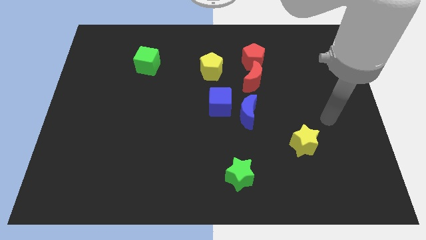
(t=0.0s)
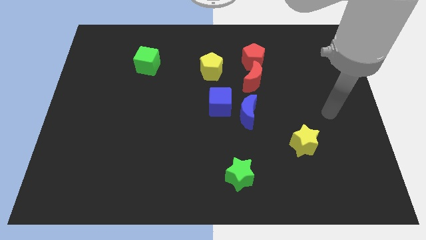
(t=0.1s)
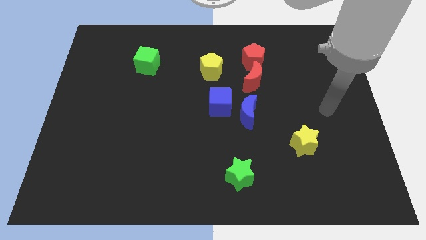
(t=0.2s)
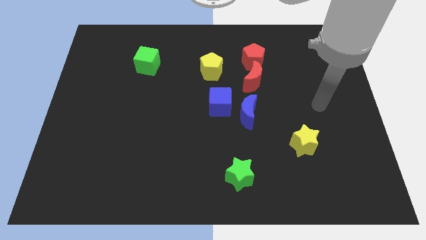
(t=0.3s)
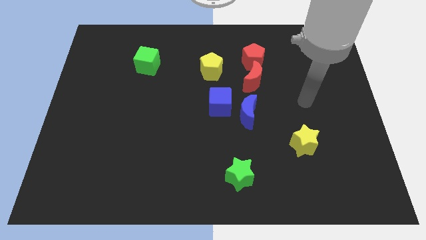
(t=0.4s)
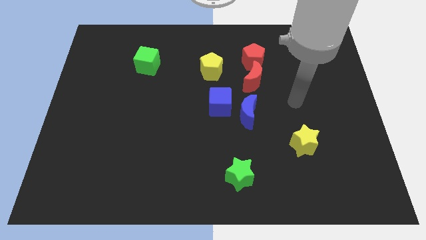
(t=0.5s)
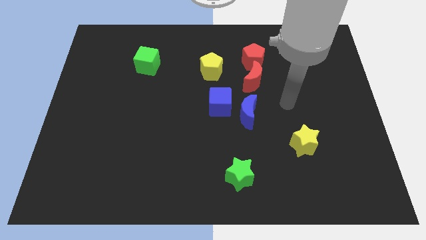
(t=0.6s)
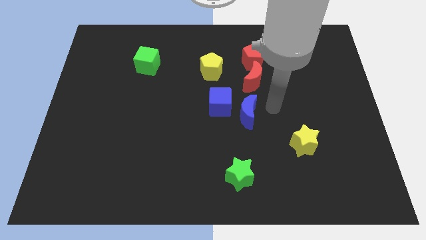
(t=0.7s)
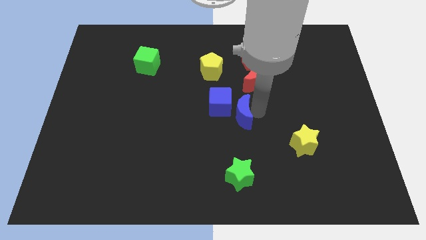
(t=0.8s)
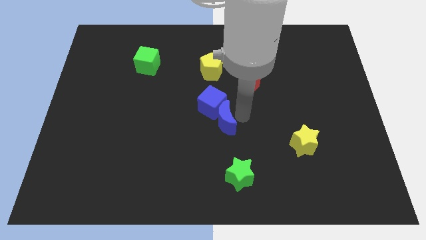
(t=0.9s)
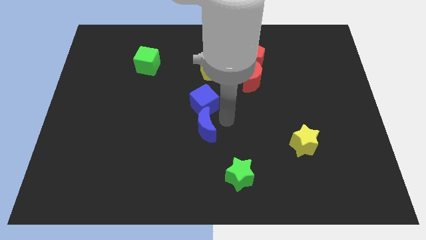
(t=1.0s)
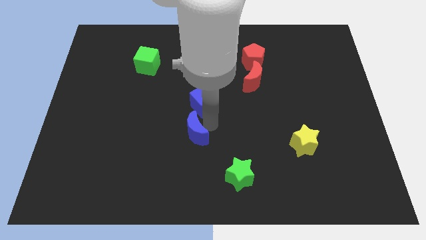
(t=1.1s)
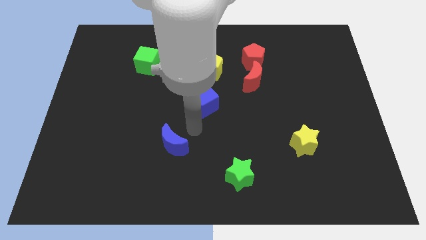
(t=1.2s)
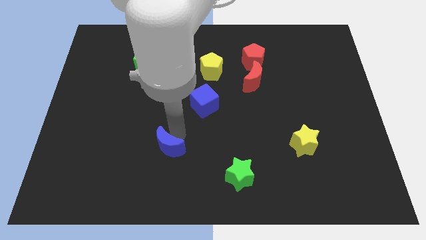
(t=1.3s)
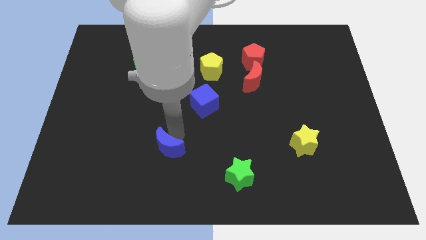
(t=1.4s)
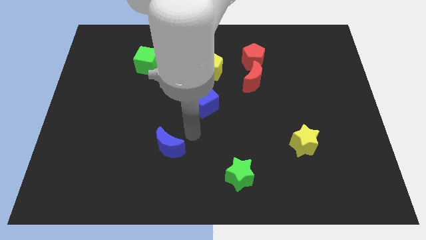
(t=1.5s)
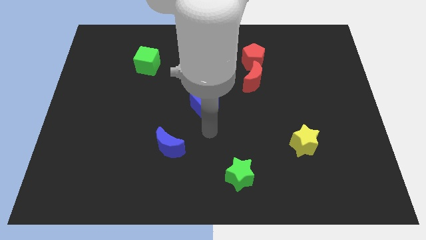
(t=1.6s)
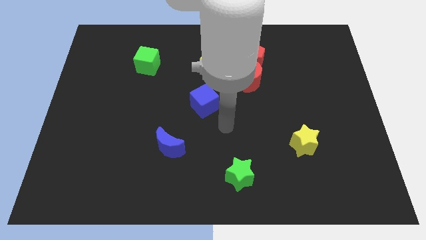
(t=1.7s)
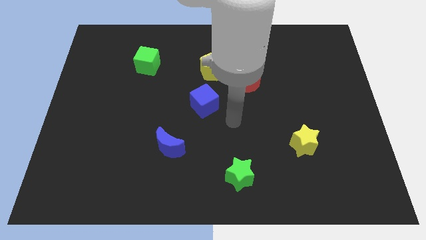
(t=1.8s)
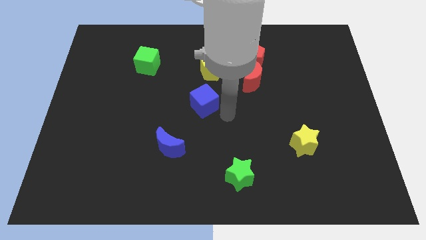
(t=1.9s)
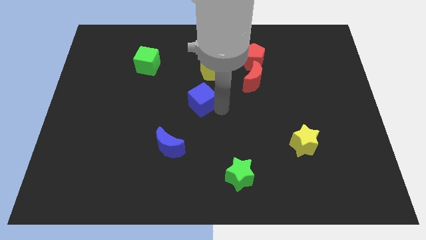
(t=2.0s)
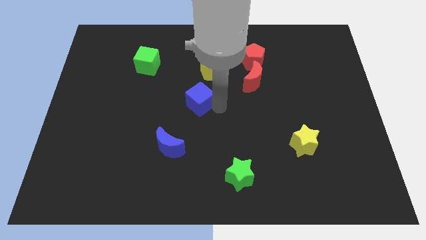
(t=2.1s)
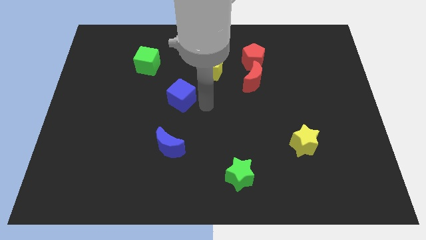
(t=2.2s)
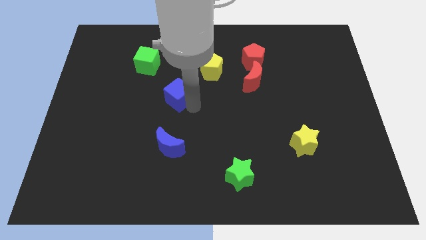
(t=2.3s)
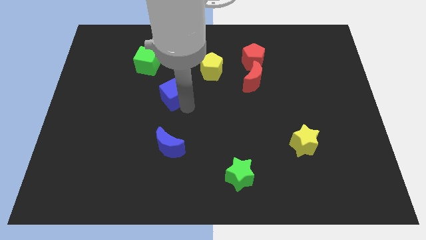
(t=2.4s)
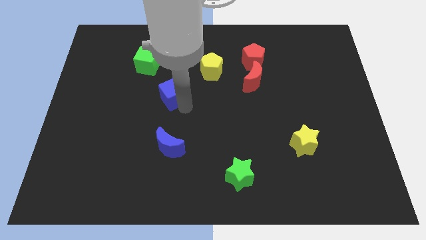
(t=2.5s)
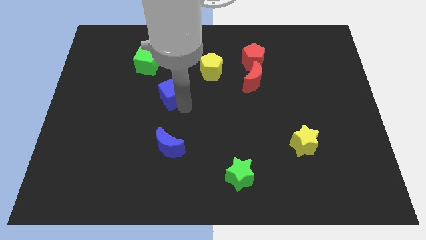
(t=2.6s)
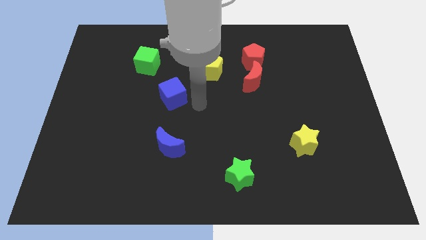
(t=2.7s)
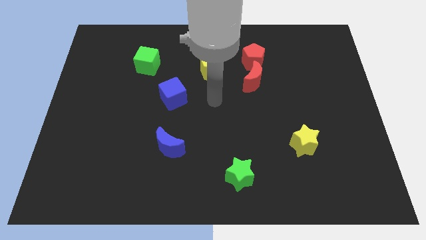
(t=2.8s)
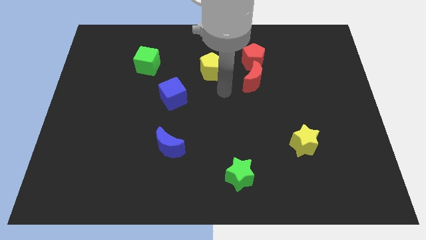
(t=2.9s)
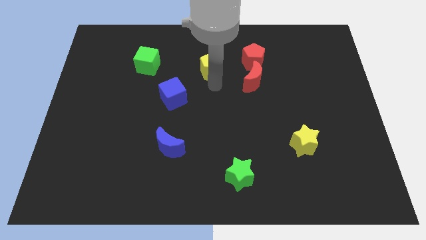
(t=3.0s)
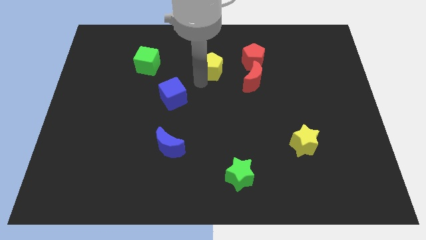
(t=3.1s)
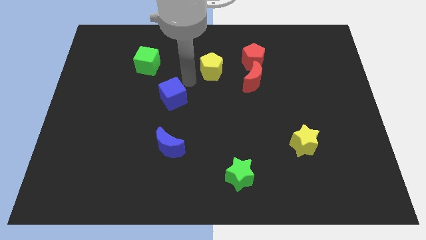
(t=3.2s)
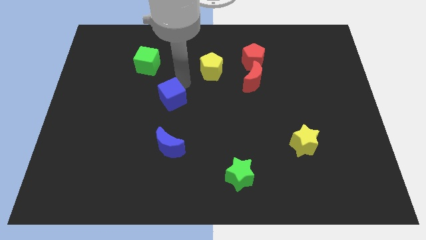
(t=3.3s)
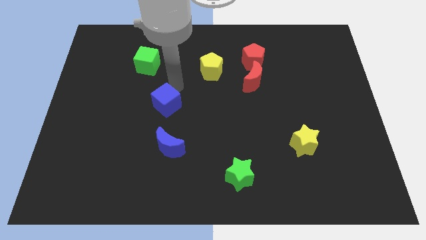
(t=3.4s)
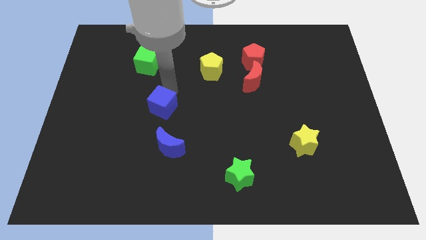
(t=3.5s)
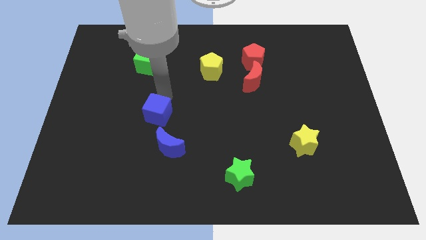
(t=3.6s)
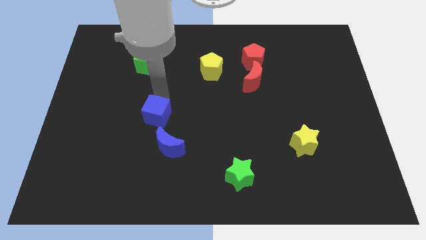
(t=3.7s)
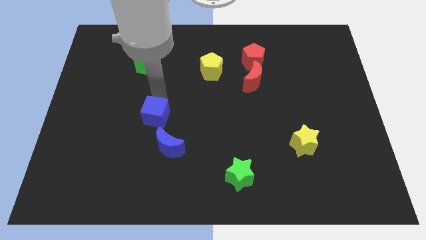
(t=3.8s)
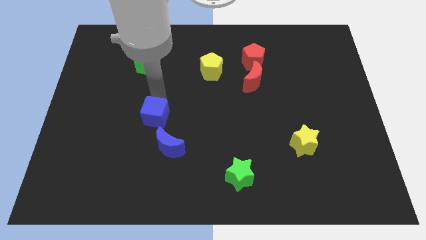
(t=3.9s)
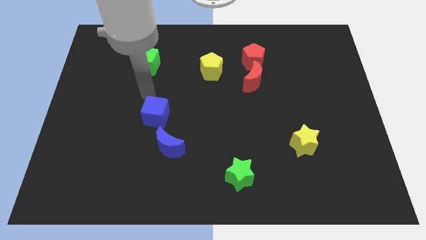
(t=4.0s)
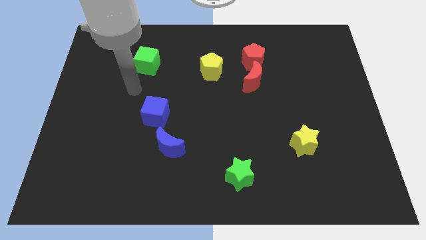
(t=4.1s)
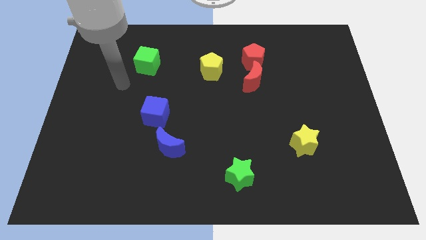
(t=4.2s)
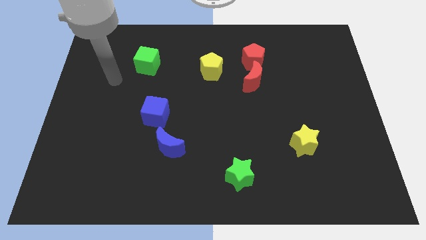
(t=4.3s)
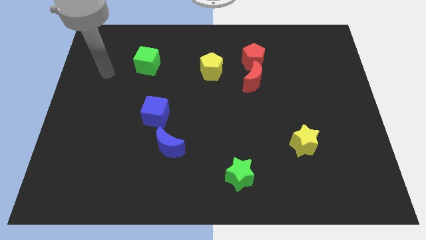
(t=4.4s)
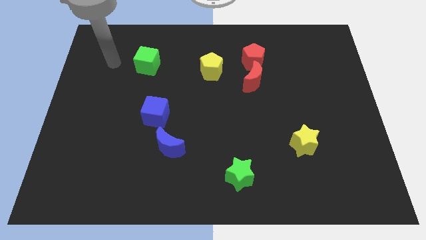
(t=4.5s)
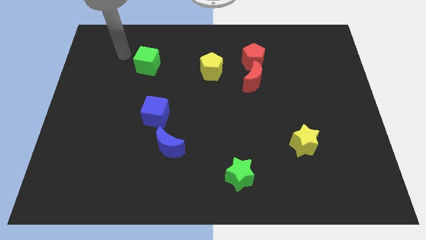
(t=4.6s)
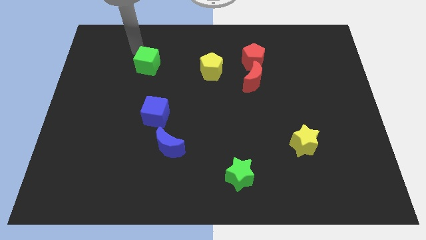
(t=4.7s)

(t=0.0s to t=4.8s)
place blue moon and blue cube together

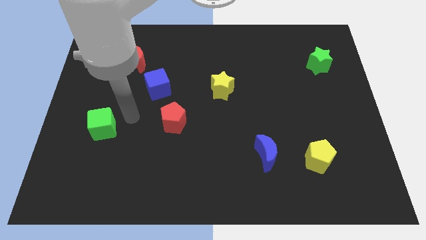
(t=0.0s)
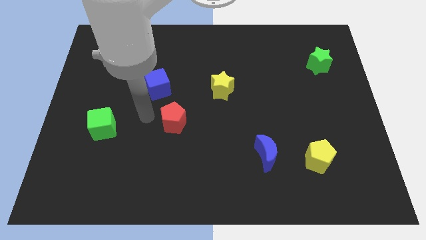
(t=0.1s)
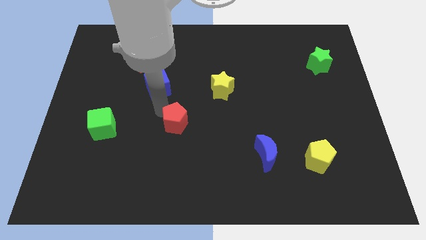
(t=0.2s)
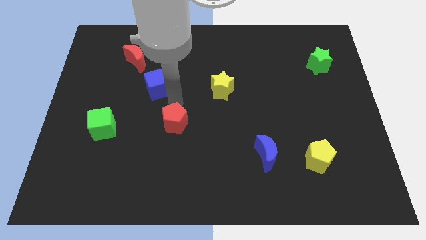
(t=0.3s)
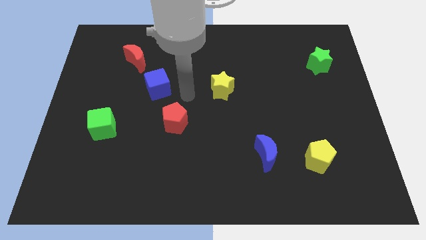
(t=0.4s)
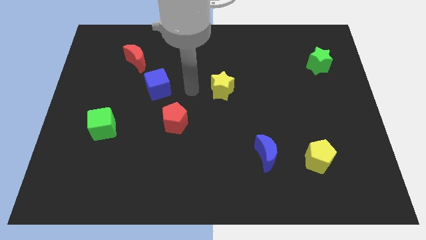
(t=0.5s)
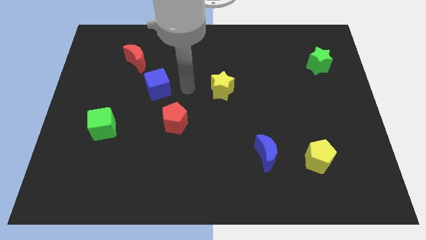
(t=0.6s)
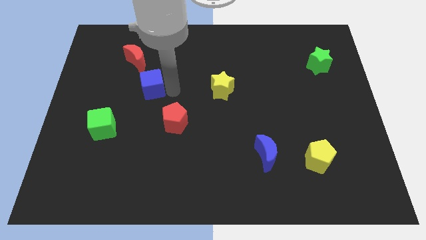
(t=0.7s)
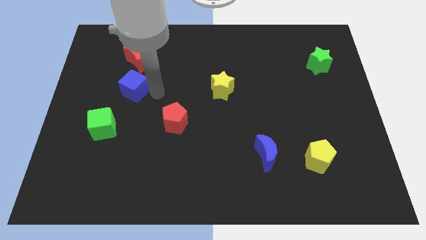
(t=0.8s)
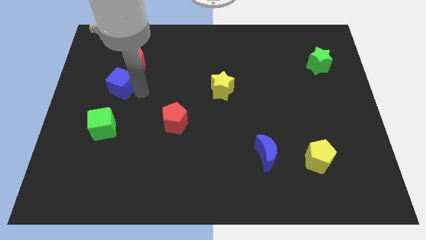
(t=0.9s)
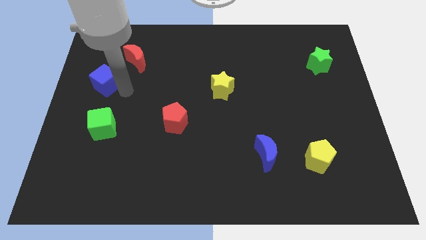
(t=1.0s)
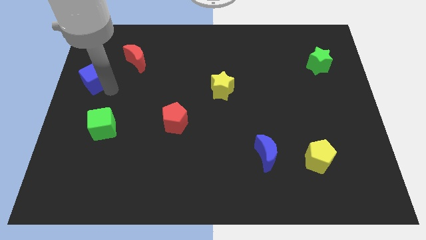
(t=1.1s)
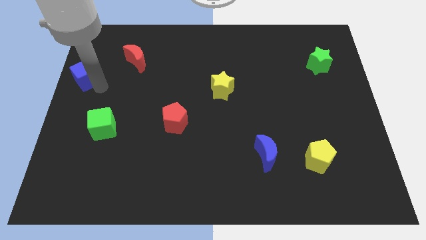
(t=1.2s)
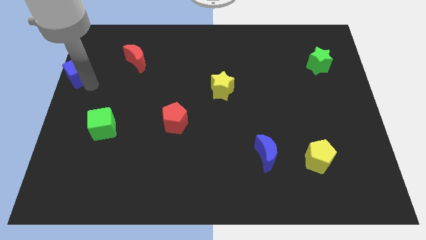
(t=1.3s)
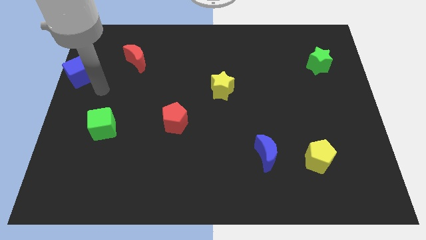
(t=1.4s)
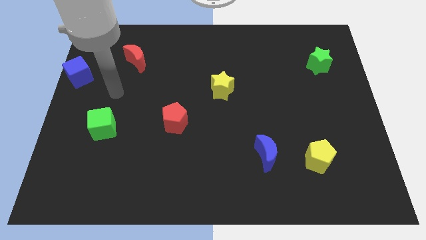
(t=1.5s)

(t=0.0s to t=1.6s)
push the blue cube diagonal to green cube

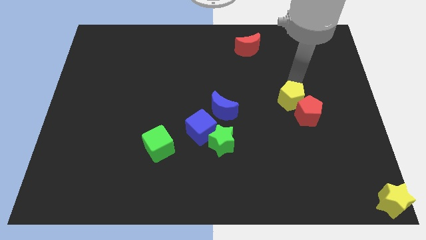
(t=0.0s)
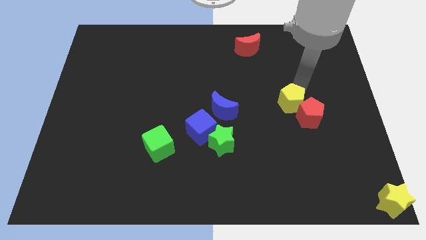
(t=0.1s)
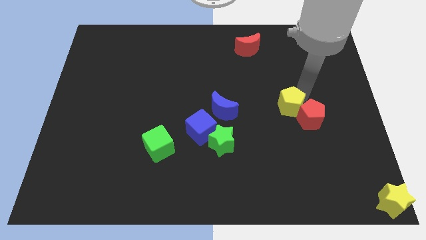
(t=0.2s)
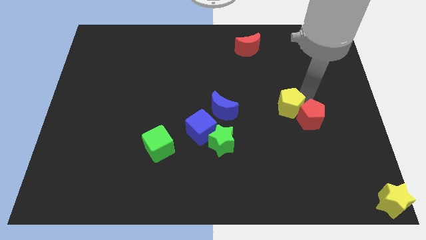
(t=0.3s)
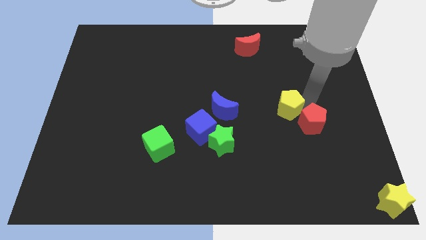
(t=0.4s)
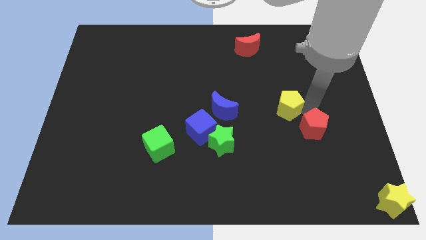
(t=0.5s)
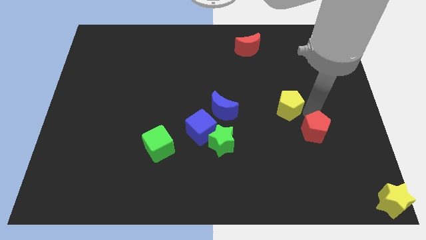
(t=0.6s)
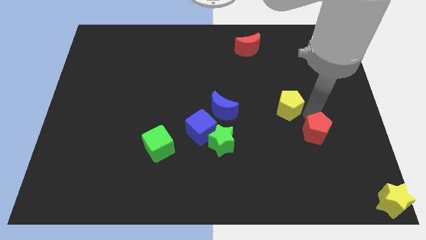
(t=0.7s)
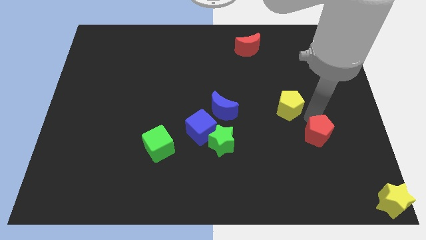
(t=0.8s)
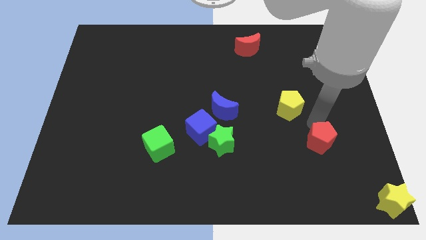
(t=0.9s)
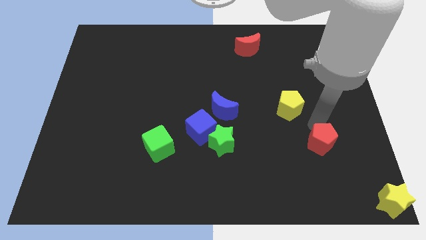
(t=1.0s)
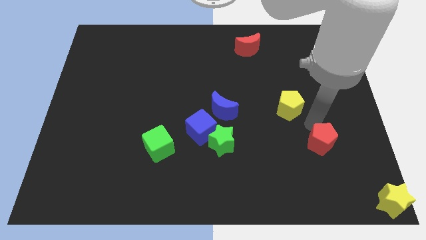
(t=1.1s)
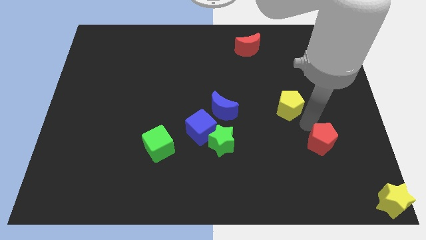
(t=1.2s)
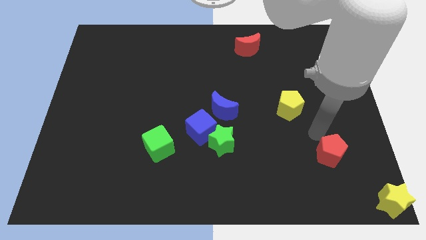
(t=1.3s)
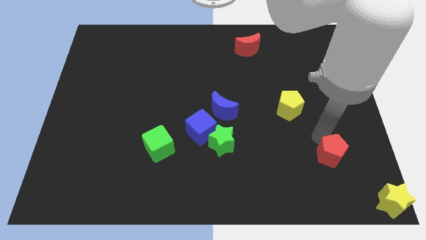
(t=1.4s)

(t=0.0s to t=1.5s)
separate the yellow pentagon from the red pentagon

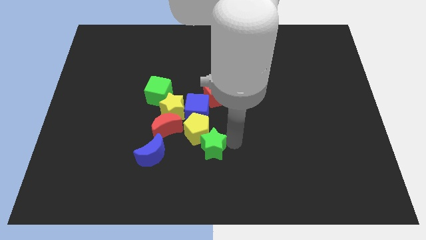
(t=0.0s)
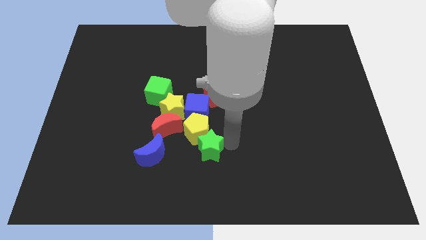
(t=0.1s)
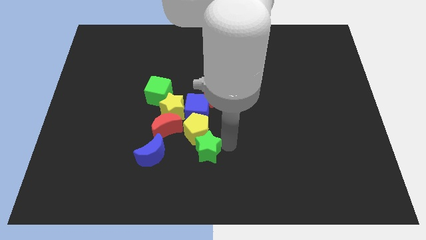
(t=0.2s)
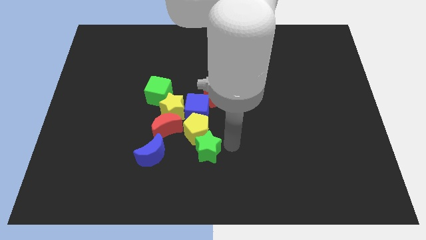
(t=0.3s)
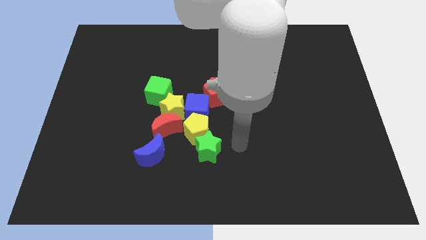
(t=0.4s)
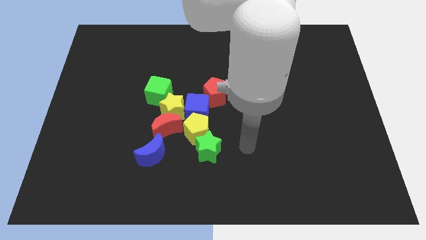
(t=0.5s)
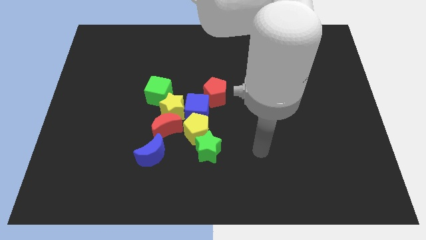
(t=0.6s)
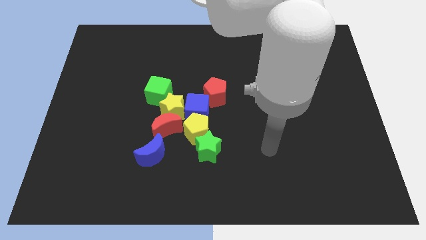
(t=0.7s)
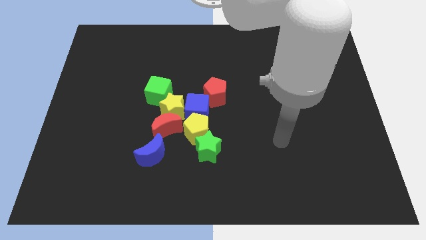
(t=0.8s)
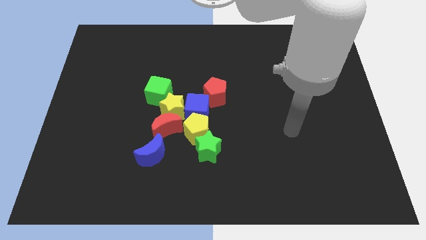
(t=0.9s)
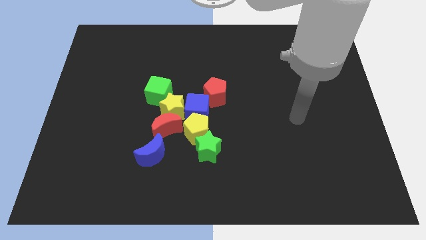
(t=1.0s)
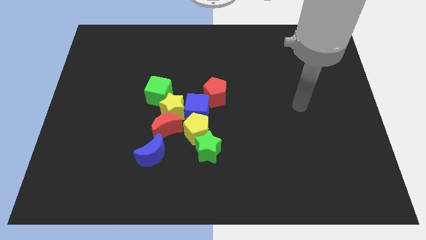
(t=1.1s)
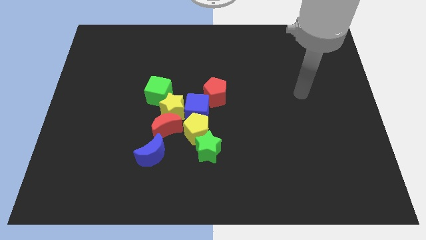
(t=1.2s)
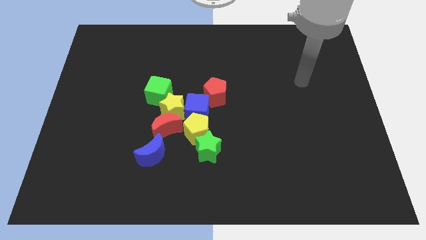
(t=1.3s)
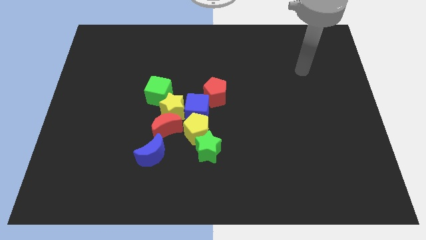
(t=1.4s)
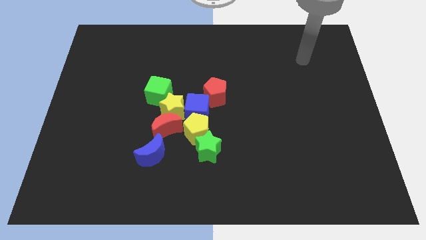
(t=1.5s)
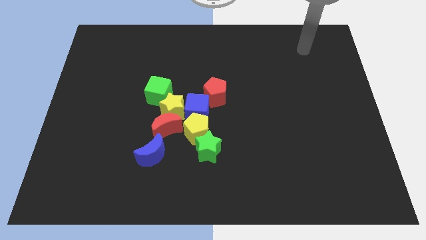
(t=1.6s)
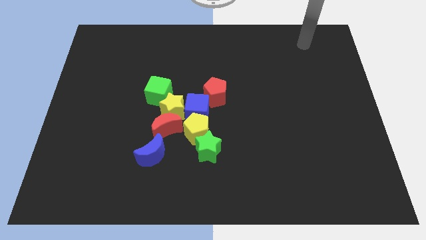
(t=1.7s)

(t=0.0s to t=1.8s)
move your arm to the top side of the board
